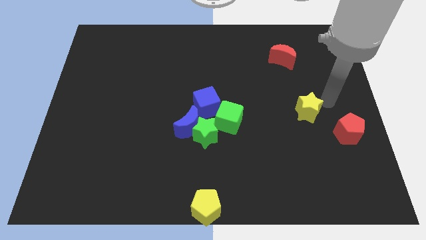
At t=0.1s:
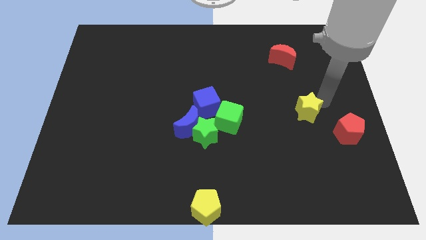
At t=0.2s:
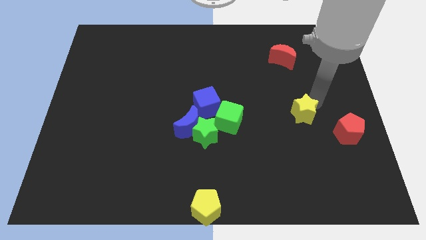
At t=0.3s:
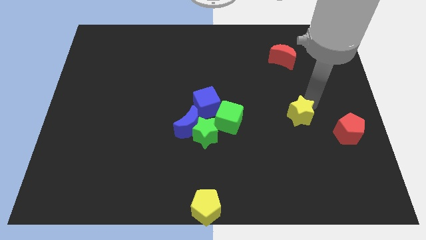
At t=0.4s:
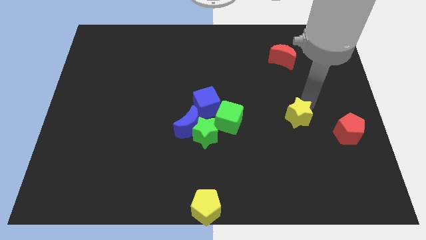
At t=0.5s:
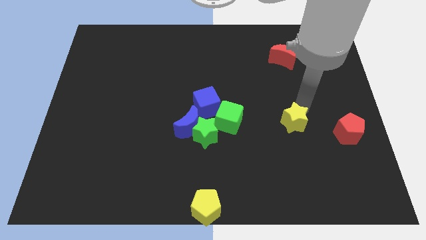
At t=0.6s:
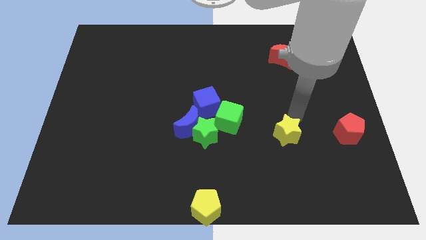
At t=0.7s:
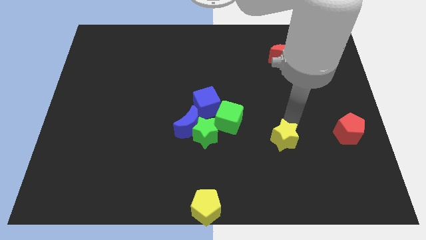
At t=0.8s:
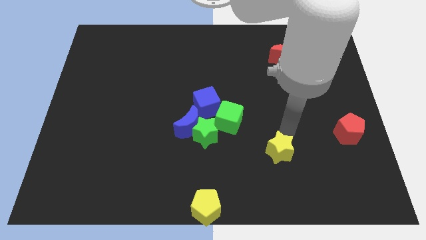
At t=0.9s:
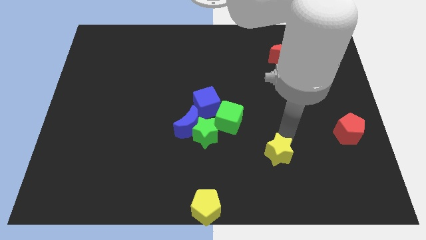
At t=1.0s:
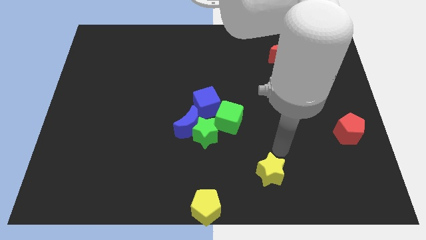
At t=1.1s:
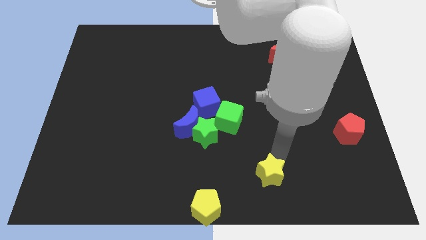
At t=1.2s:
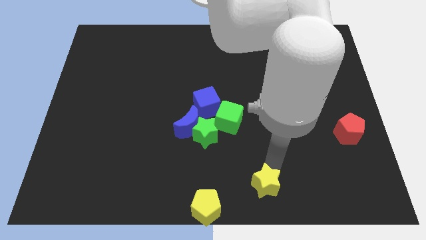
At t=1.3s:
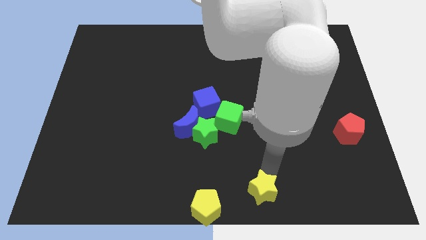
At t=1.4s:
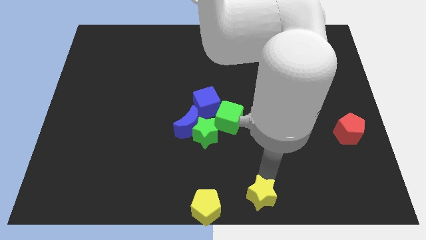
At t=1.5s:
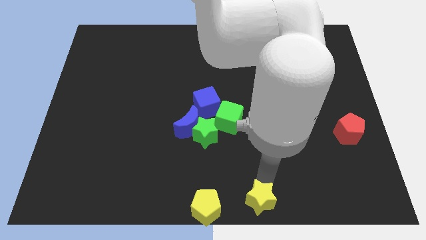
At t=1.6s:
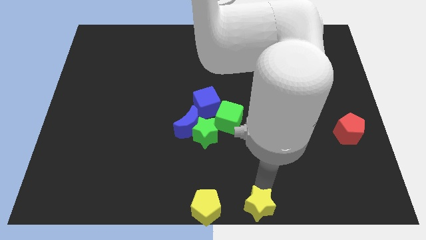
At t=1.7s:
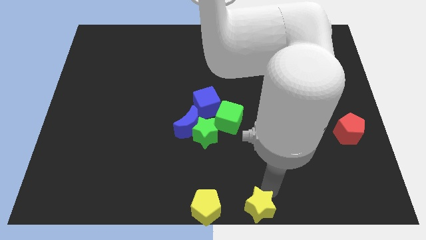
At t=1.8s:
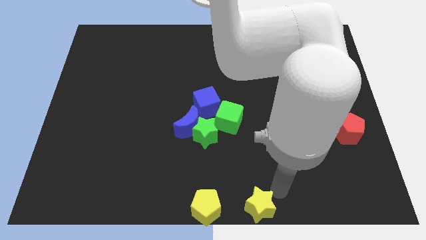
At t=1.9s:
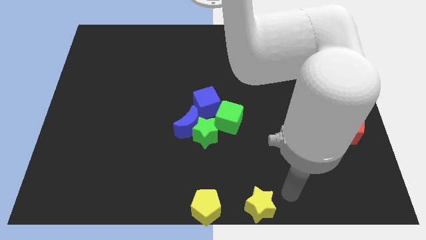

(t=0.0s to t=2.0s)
place the yellow star to the bottom center of the board

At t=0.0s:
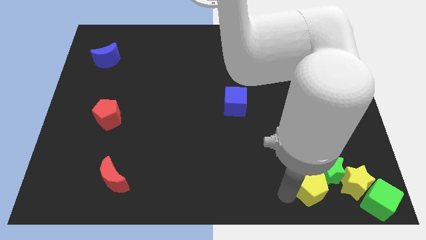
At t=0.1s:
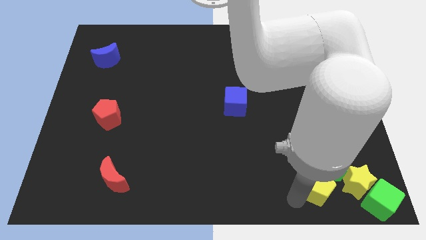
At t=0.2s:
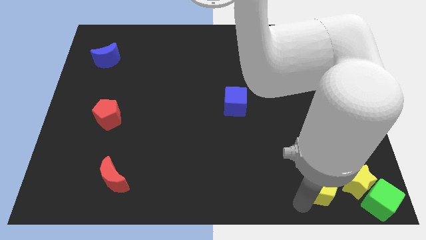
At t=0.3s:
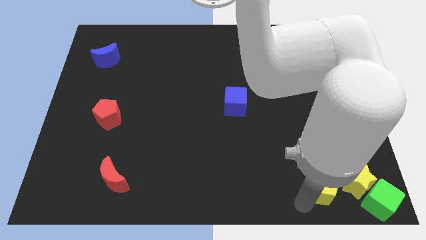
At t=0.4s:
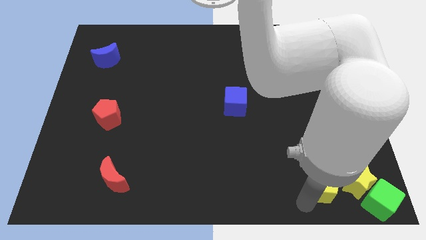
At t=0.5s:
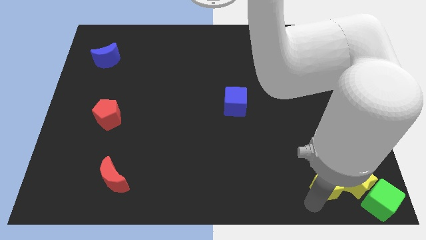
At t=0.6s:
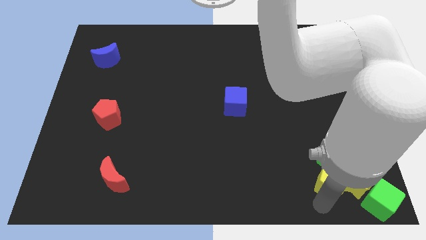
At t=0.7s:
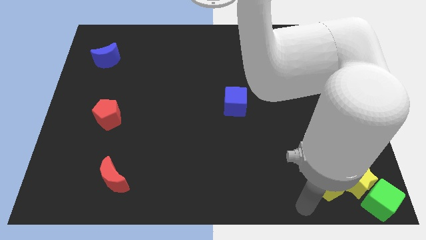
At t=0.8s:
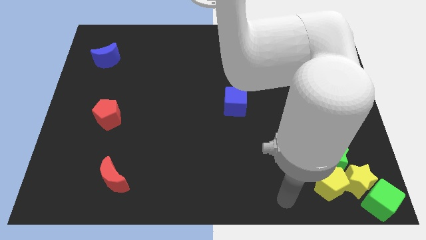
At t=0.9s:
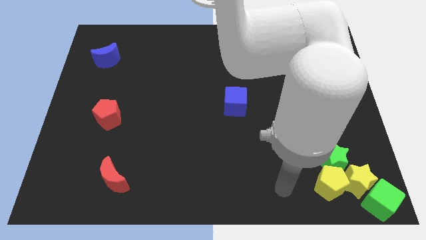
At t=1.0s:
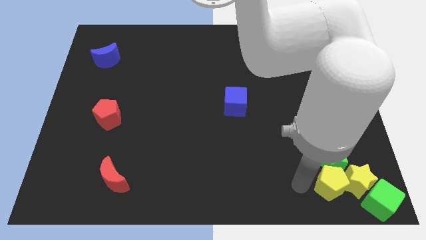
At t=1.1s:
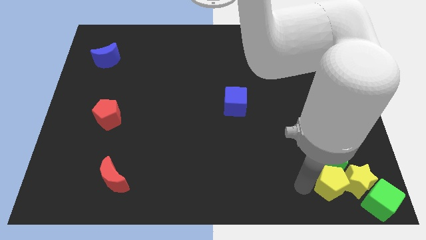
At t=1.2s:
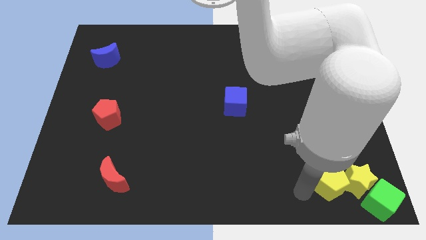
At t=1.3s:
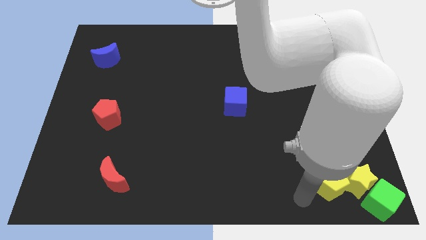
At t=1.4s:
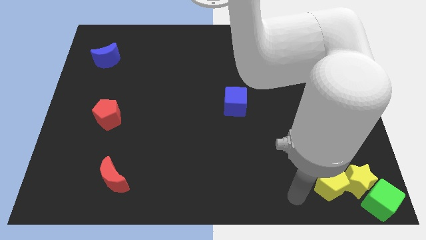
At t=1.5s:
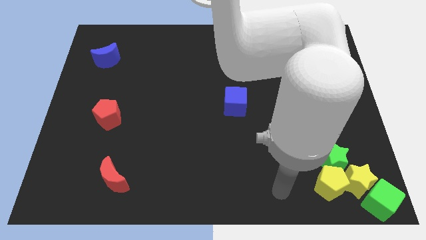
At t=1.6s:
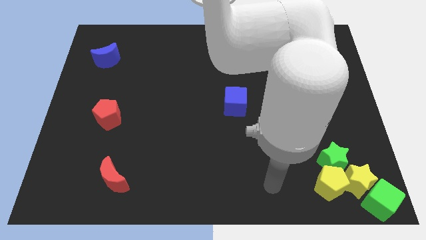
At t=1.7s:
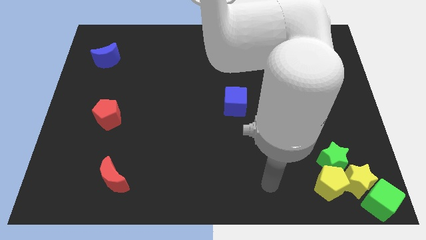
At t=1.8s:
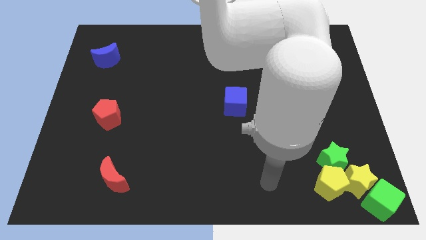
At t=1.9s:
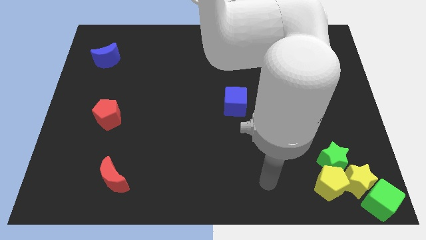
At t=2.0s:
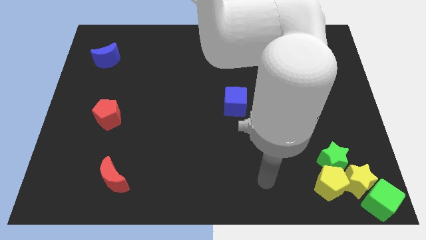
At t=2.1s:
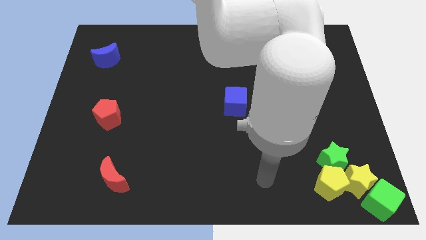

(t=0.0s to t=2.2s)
place yellow pentagon to the left side of yellow star

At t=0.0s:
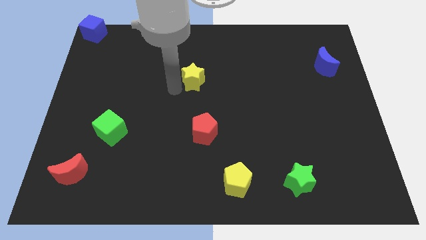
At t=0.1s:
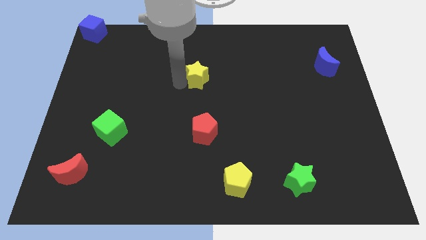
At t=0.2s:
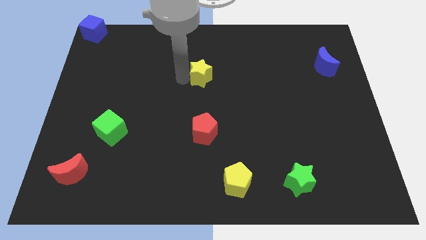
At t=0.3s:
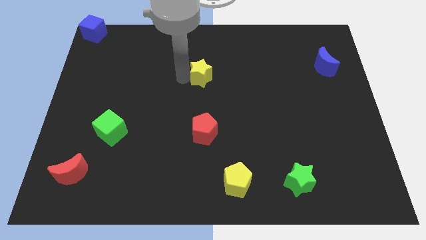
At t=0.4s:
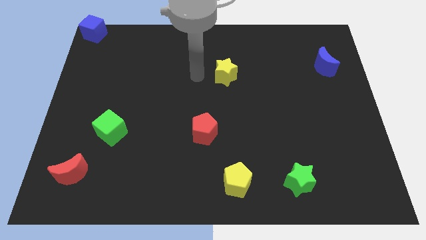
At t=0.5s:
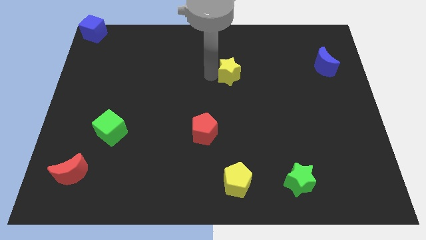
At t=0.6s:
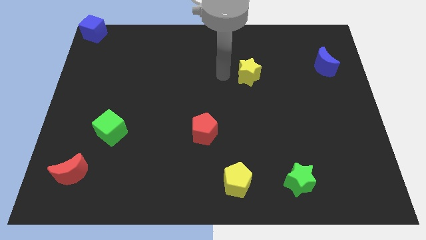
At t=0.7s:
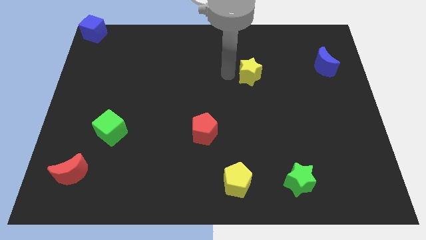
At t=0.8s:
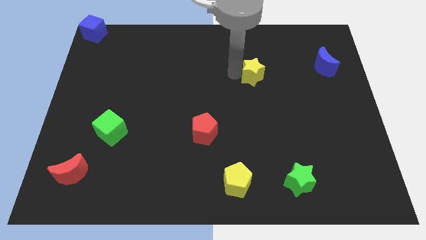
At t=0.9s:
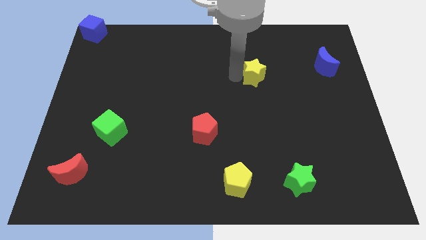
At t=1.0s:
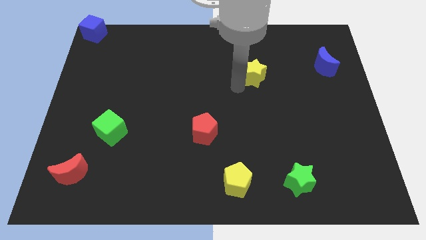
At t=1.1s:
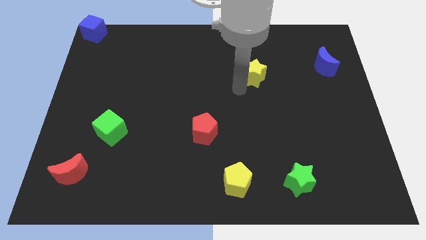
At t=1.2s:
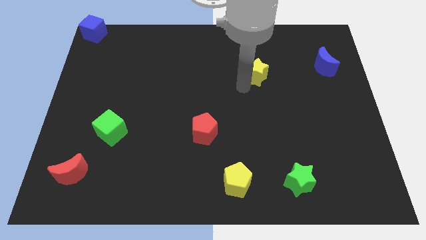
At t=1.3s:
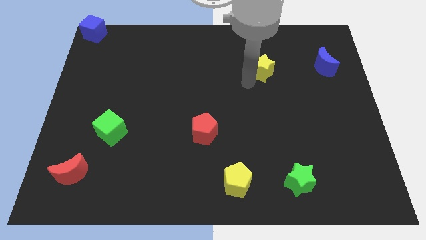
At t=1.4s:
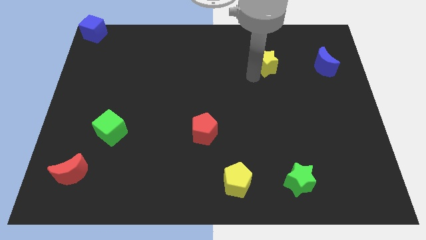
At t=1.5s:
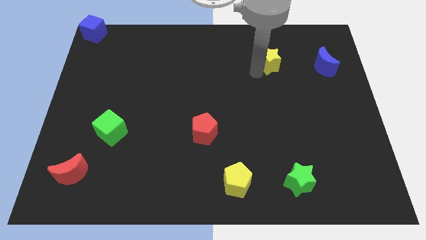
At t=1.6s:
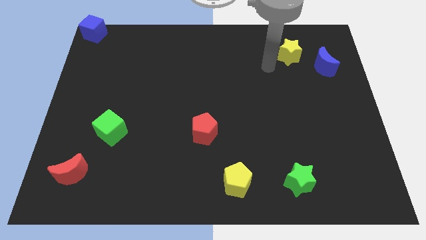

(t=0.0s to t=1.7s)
place the yellow star diagonally above the yellow pentagon

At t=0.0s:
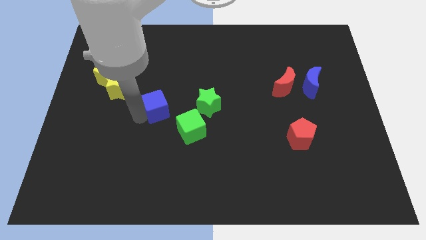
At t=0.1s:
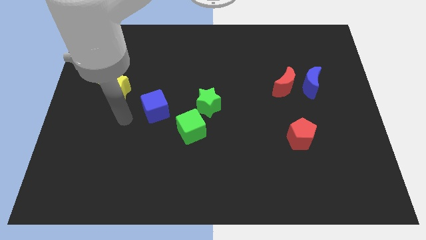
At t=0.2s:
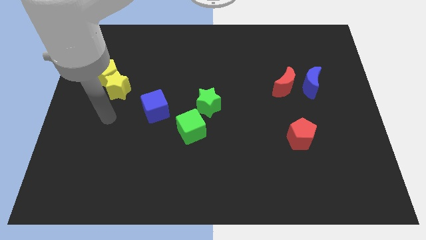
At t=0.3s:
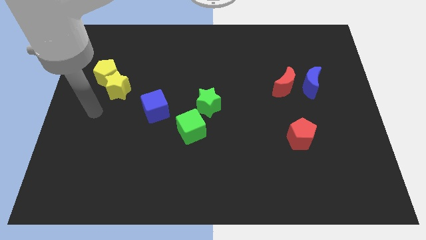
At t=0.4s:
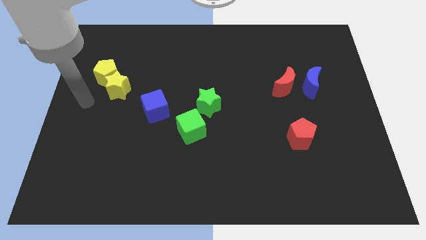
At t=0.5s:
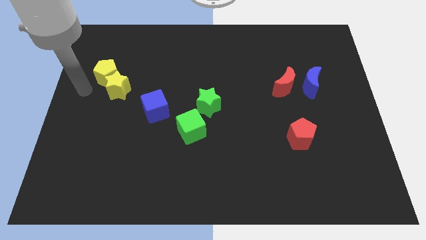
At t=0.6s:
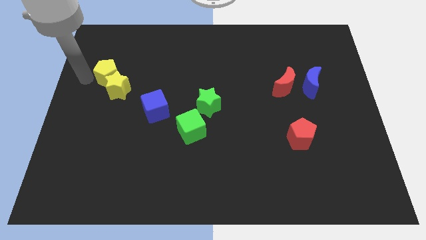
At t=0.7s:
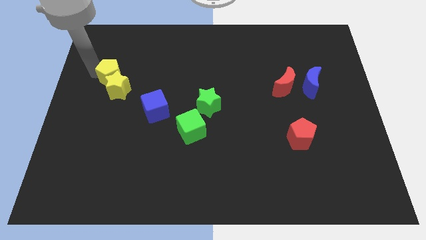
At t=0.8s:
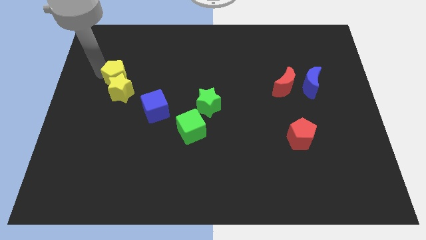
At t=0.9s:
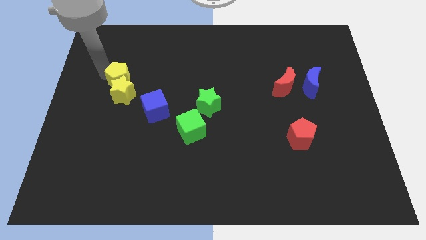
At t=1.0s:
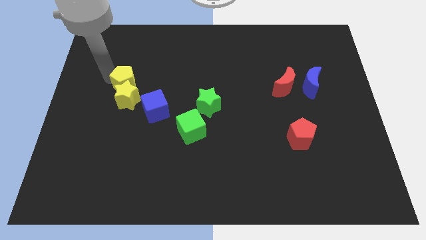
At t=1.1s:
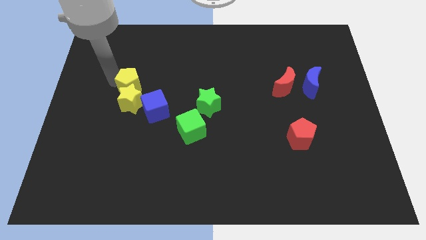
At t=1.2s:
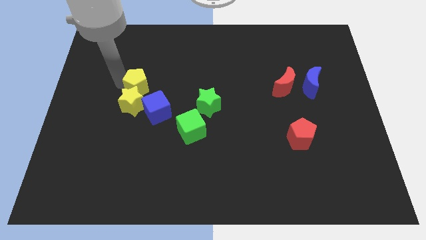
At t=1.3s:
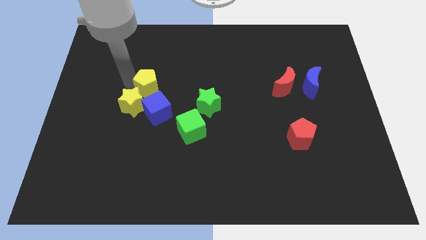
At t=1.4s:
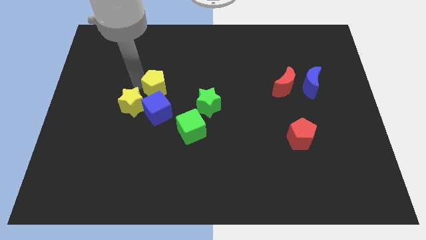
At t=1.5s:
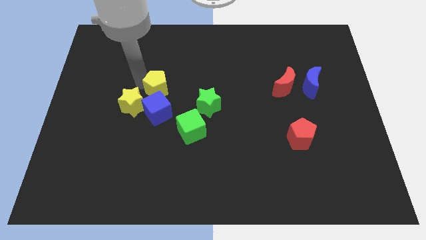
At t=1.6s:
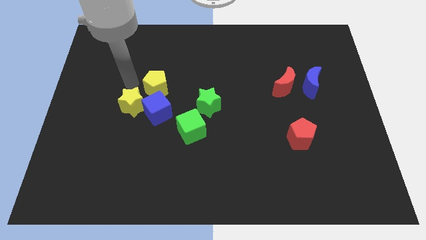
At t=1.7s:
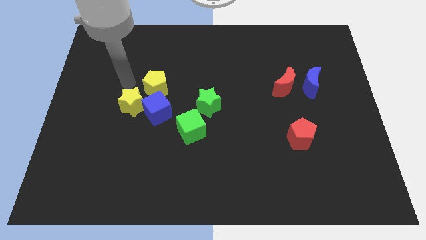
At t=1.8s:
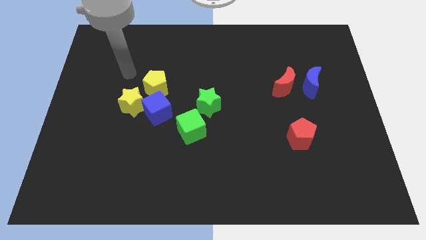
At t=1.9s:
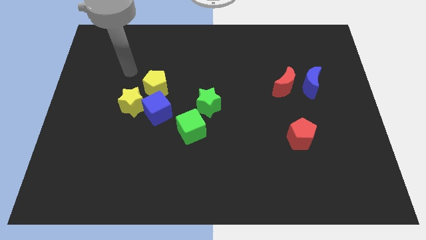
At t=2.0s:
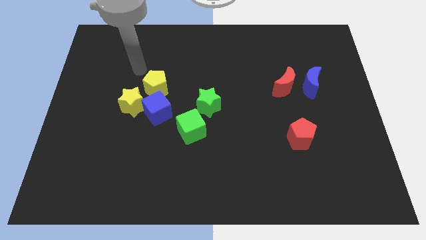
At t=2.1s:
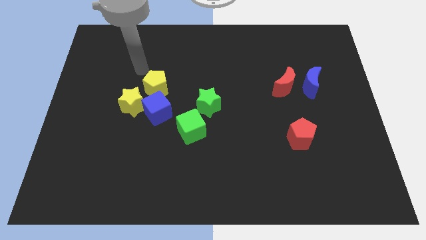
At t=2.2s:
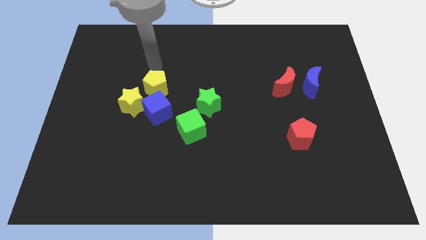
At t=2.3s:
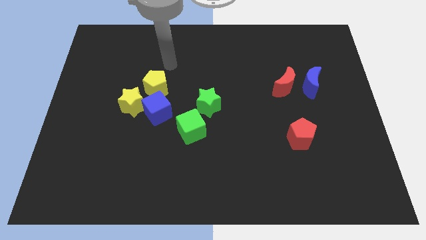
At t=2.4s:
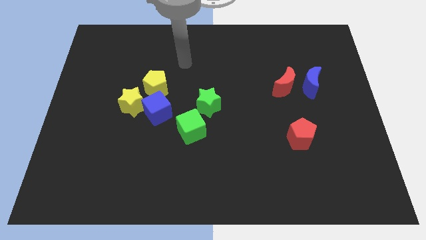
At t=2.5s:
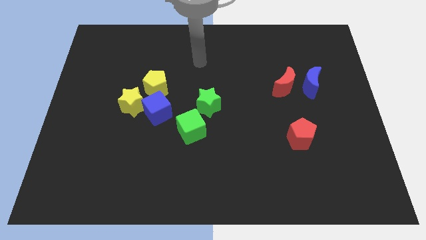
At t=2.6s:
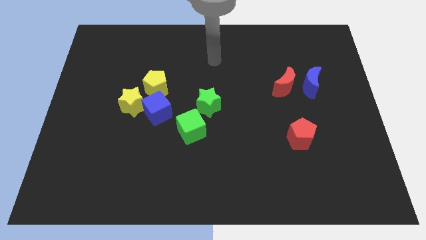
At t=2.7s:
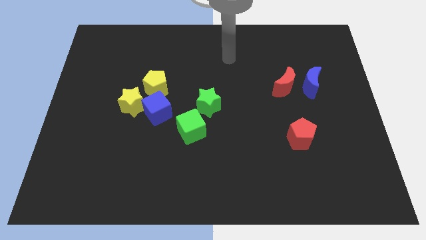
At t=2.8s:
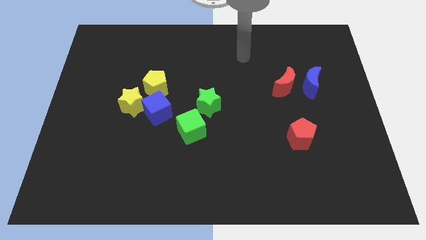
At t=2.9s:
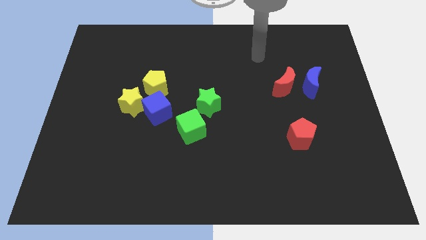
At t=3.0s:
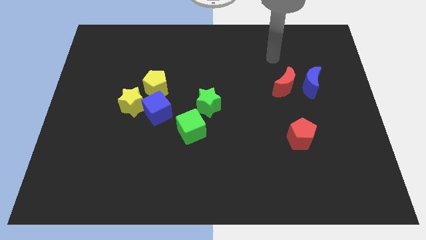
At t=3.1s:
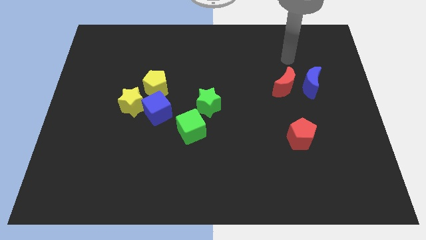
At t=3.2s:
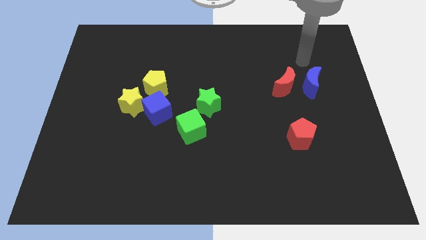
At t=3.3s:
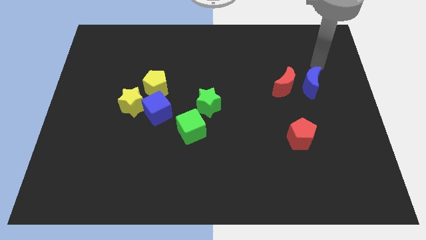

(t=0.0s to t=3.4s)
push the yellow star and yellow pentagon into the blue cube
